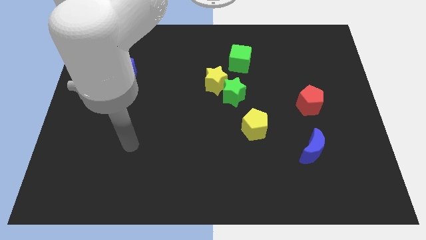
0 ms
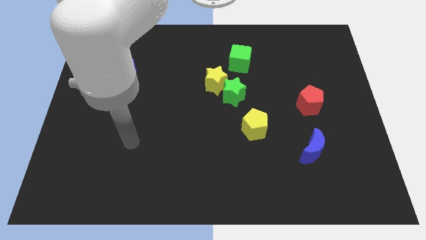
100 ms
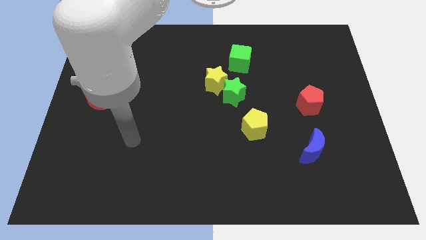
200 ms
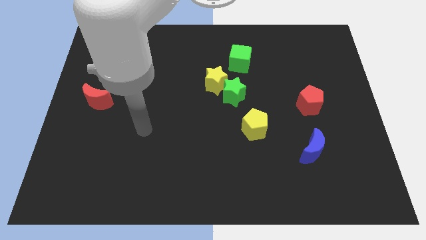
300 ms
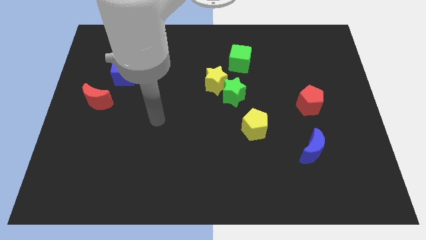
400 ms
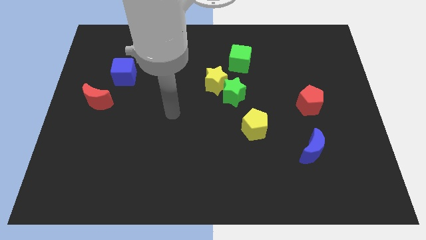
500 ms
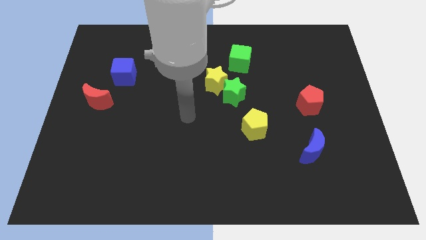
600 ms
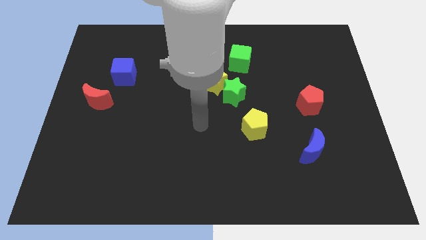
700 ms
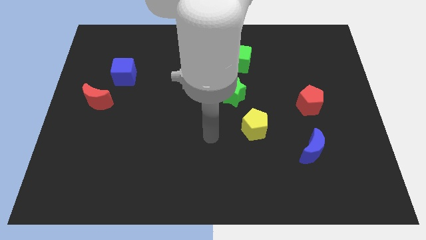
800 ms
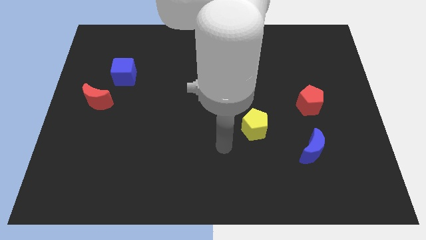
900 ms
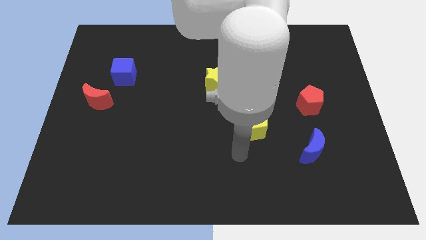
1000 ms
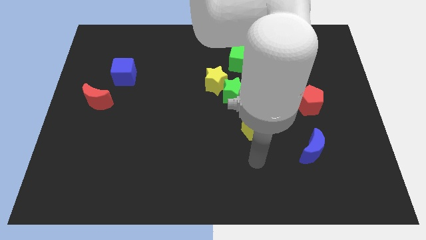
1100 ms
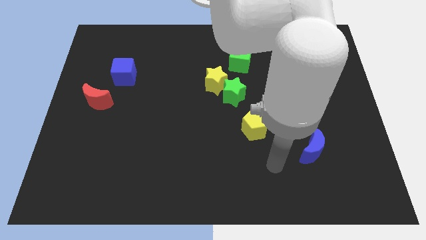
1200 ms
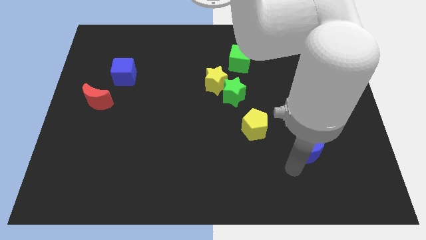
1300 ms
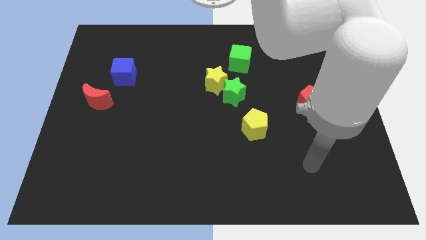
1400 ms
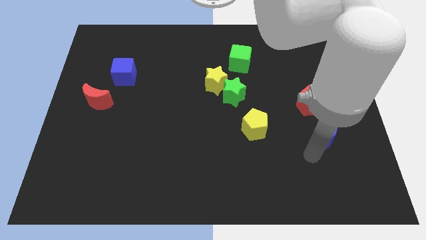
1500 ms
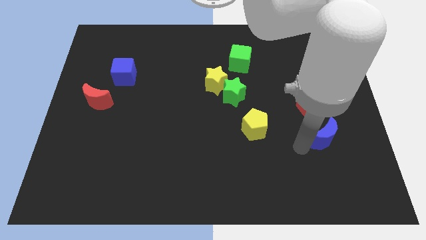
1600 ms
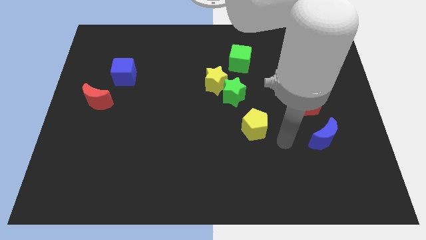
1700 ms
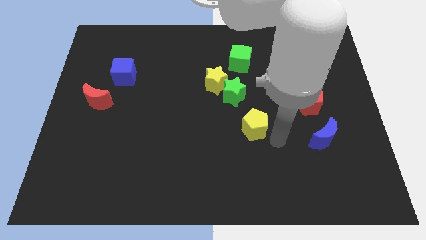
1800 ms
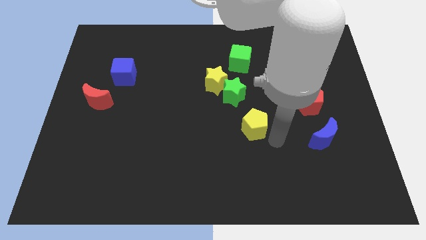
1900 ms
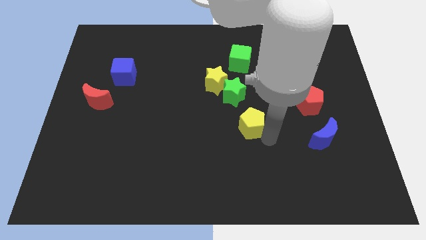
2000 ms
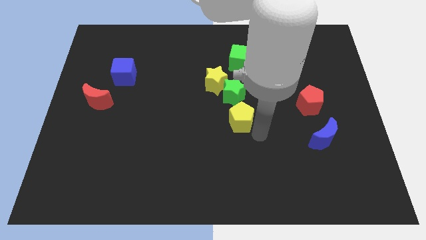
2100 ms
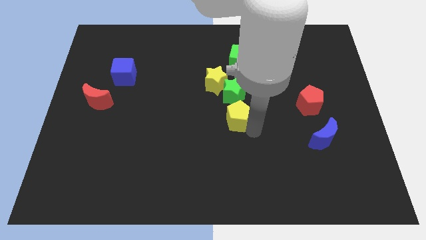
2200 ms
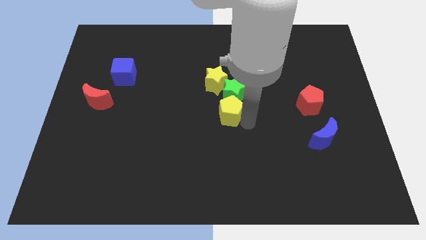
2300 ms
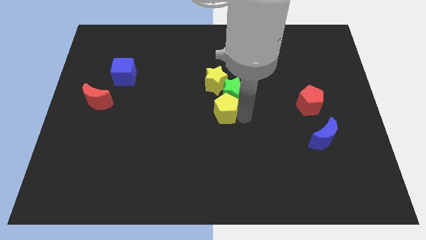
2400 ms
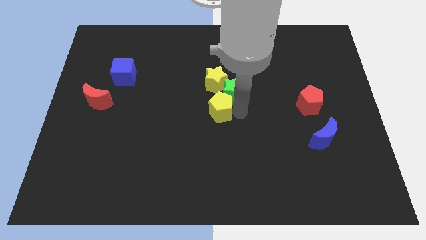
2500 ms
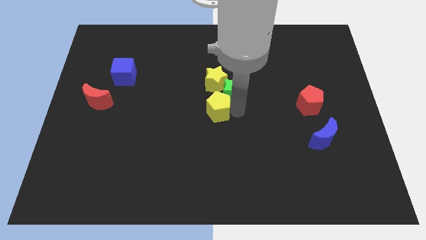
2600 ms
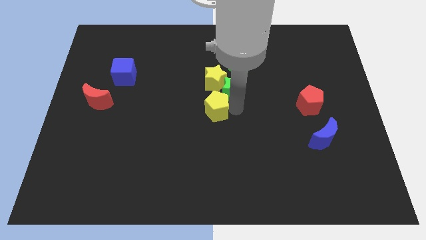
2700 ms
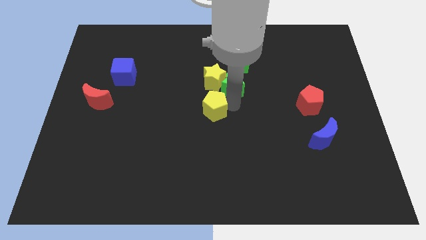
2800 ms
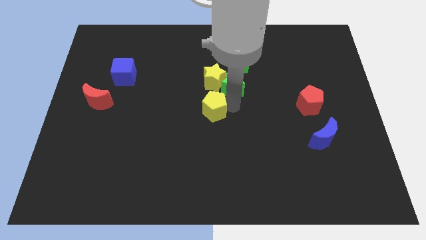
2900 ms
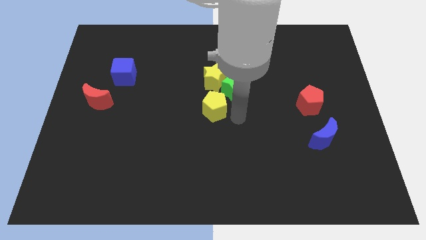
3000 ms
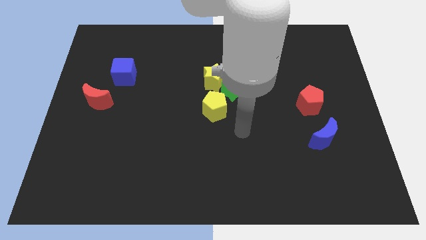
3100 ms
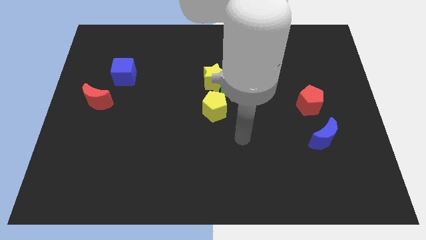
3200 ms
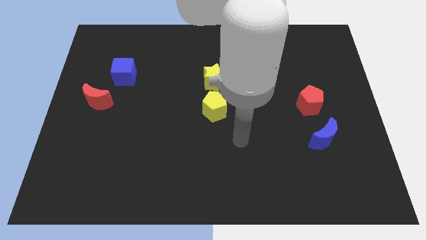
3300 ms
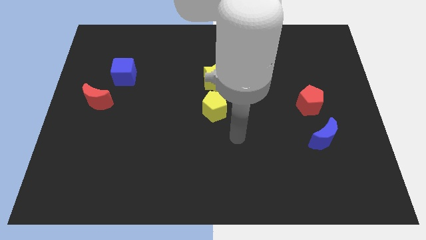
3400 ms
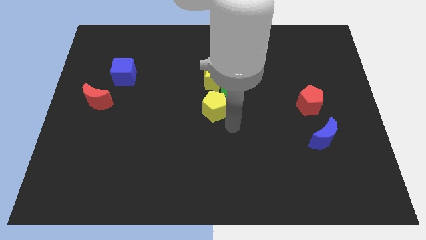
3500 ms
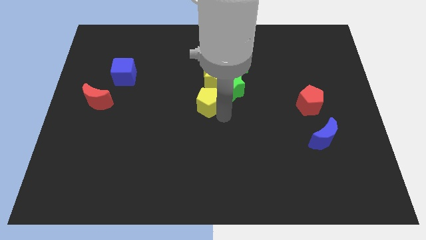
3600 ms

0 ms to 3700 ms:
push the yellow pentagon towards the bottom of the green star

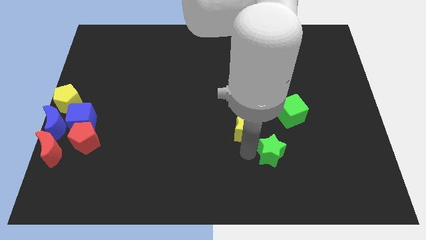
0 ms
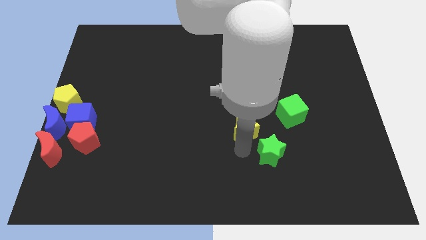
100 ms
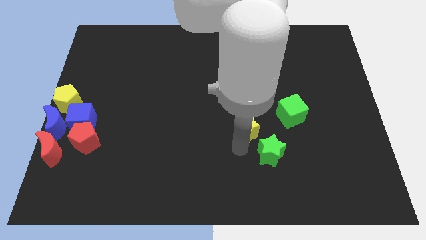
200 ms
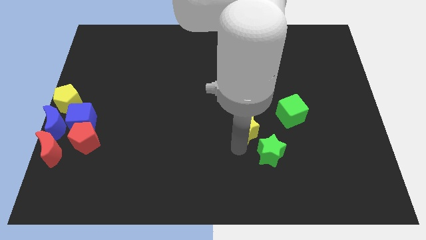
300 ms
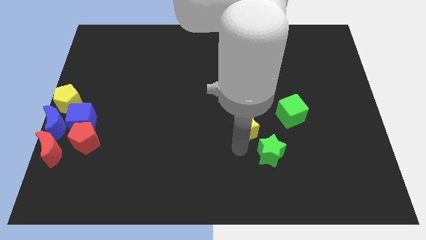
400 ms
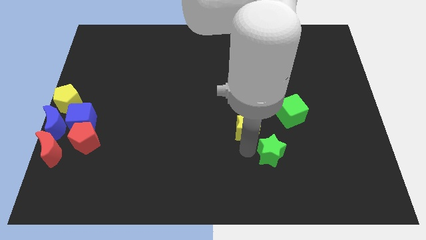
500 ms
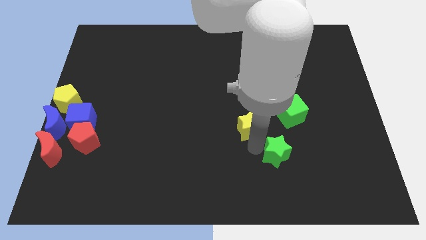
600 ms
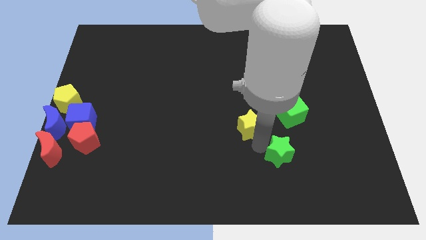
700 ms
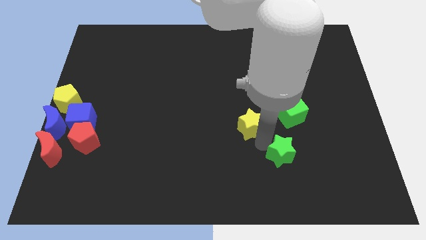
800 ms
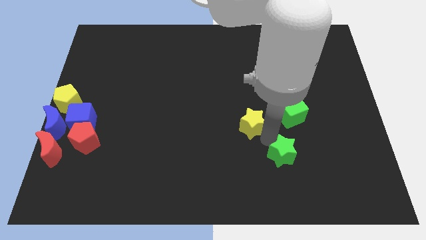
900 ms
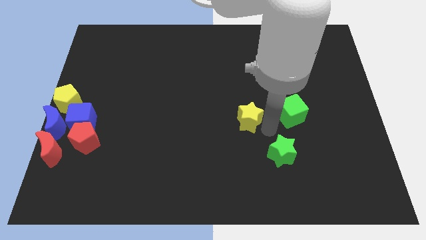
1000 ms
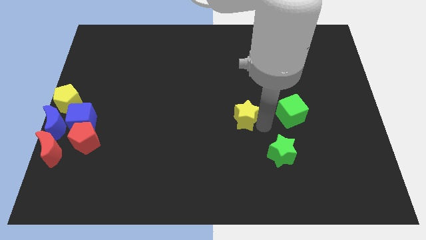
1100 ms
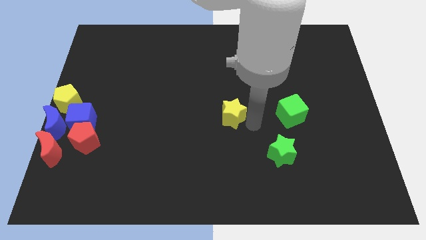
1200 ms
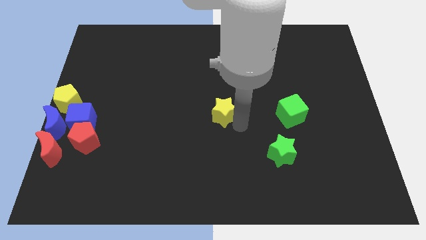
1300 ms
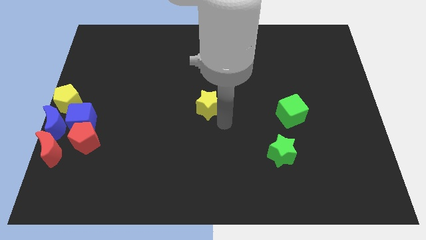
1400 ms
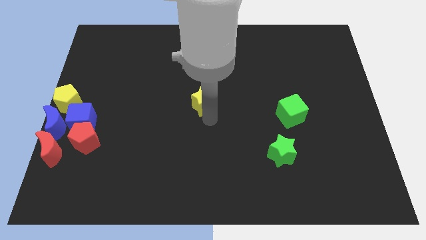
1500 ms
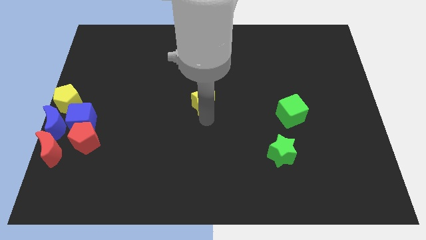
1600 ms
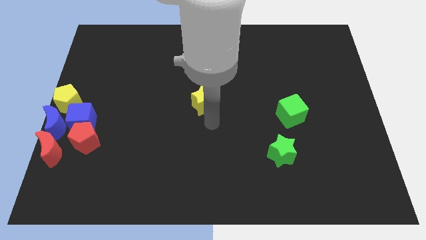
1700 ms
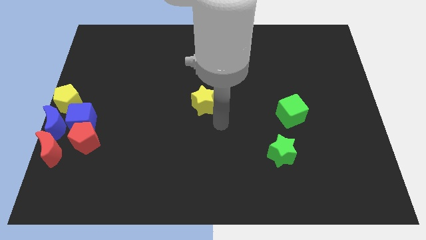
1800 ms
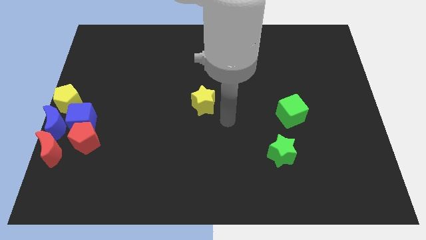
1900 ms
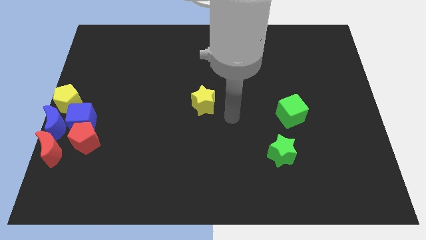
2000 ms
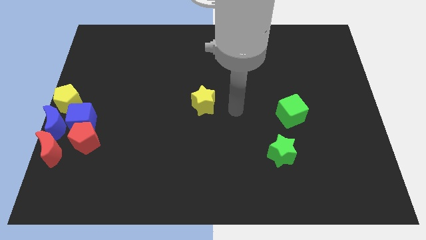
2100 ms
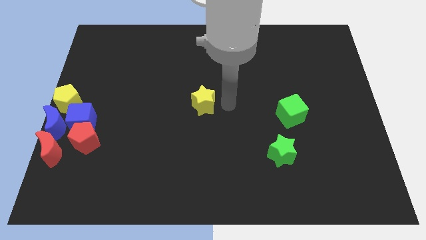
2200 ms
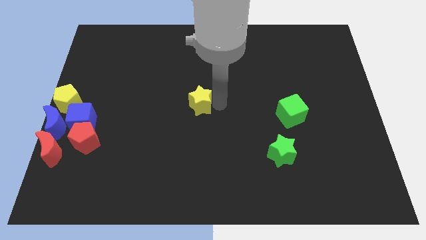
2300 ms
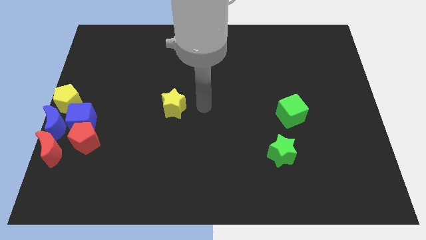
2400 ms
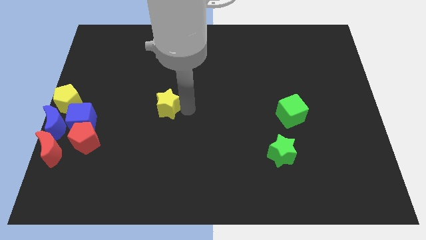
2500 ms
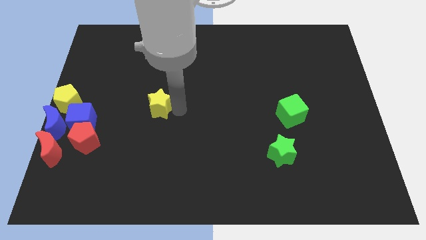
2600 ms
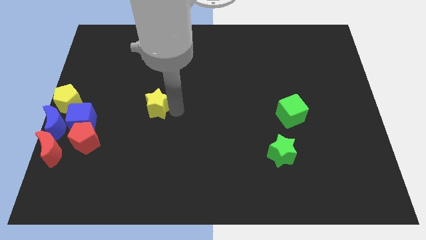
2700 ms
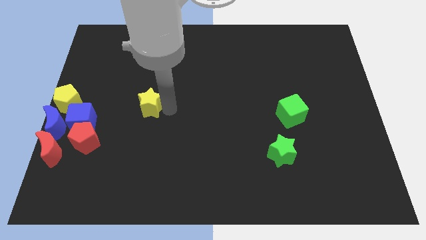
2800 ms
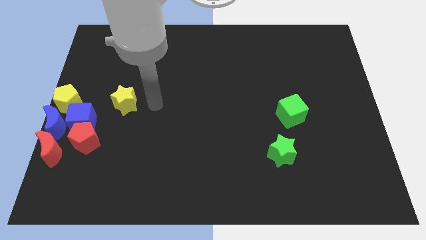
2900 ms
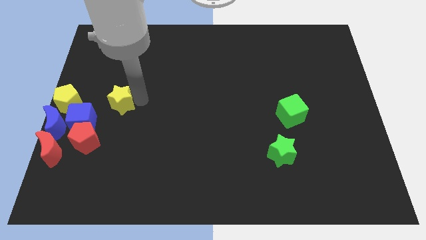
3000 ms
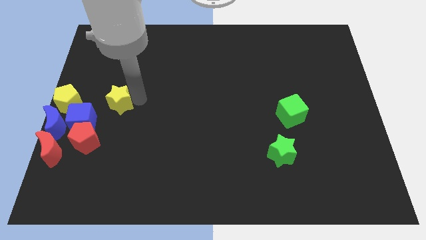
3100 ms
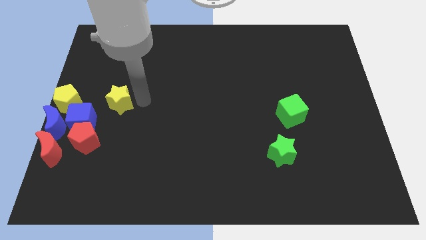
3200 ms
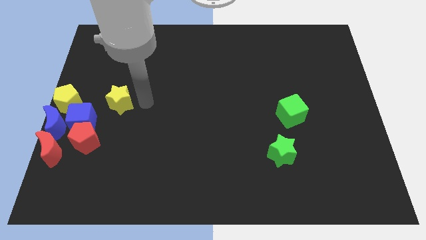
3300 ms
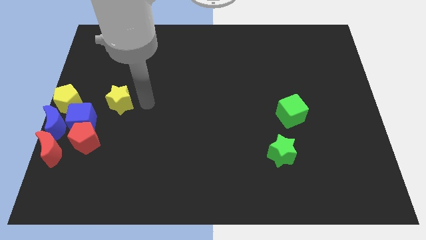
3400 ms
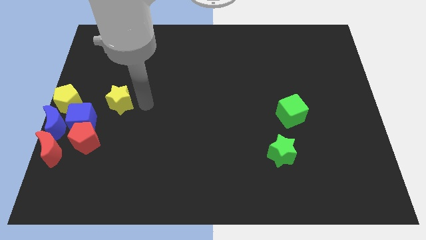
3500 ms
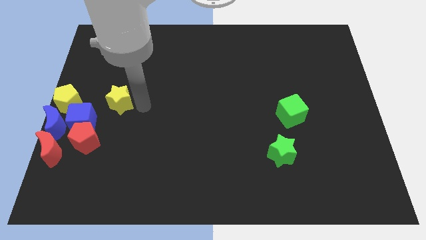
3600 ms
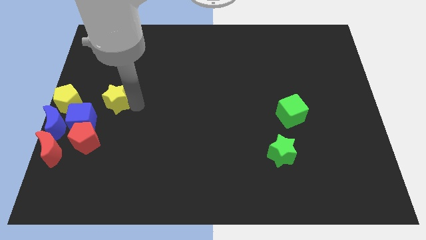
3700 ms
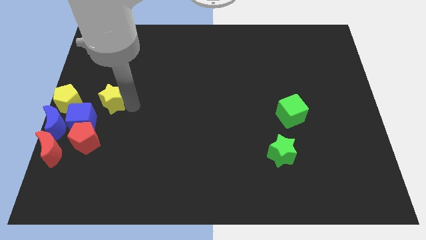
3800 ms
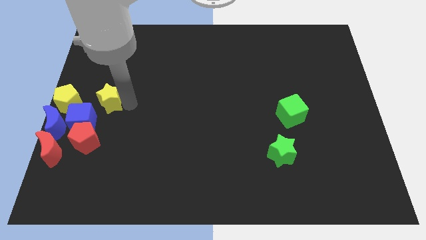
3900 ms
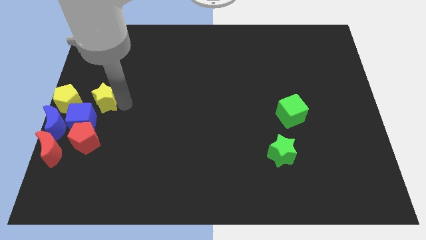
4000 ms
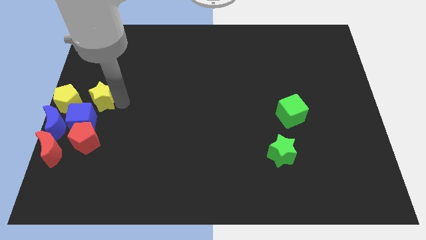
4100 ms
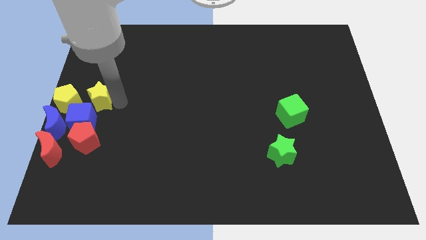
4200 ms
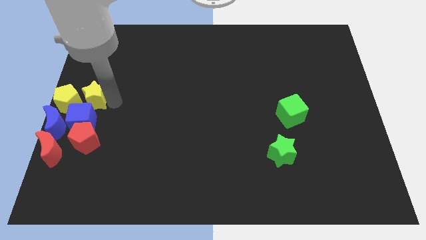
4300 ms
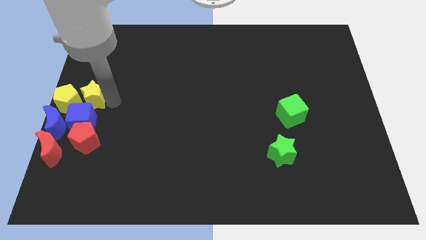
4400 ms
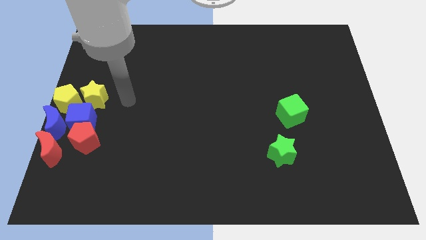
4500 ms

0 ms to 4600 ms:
push the yellow star parallel to the right of the yellow pentagon

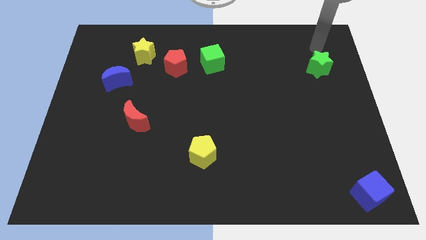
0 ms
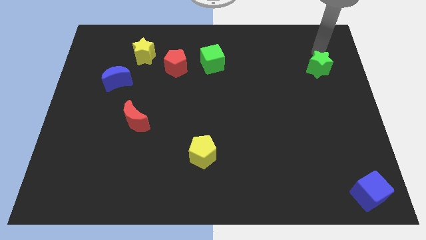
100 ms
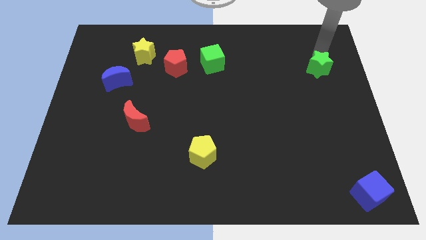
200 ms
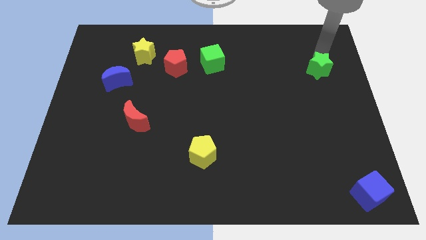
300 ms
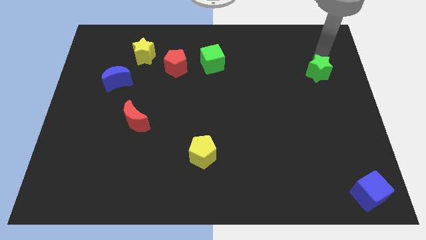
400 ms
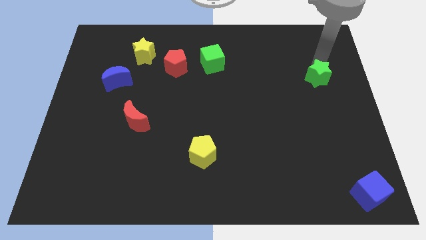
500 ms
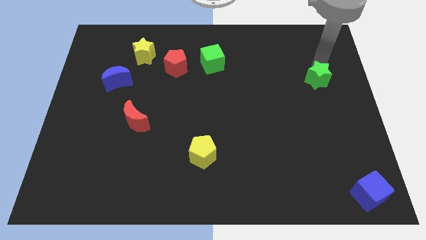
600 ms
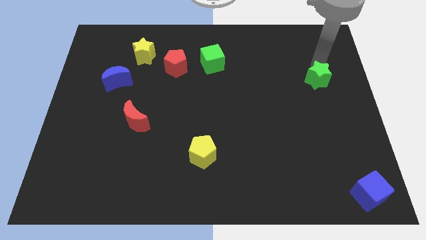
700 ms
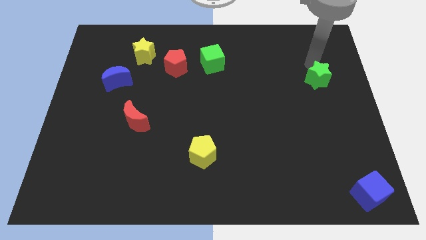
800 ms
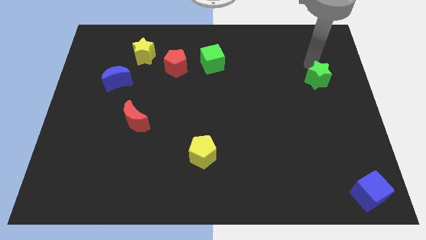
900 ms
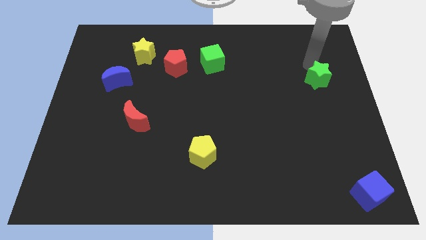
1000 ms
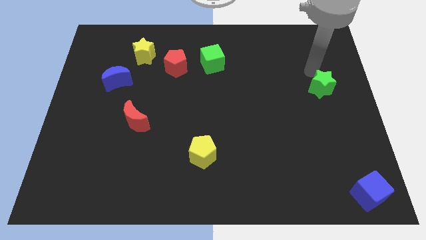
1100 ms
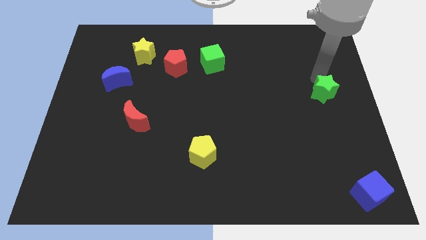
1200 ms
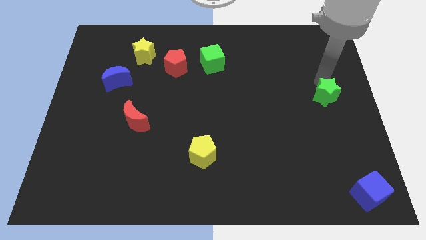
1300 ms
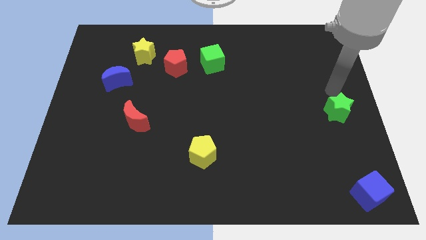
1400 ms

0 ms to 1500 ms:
move the green star slightly to the bottom
